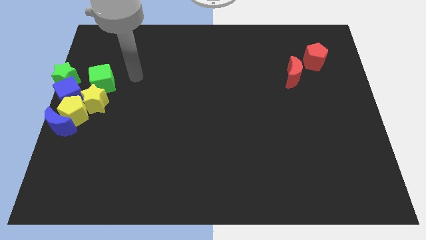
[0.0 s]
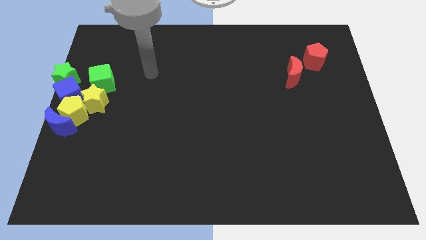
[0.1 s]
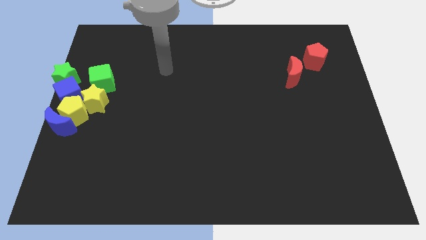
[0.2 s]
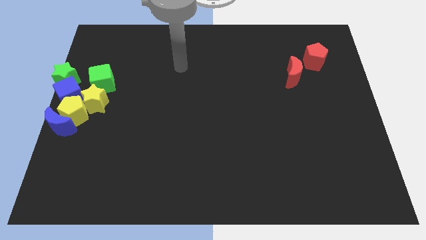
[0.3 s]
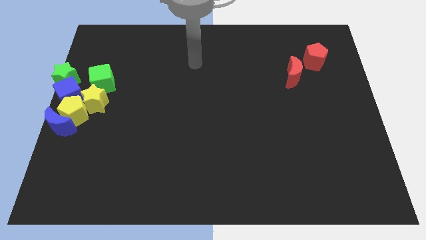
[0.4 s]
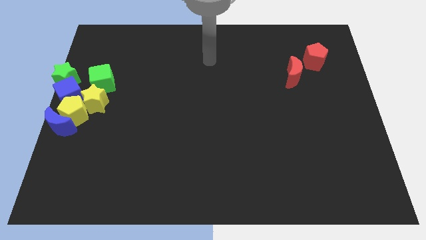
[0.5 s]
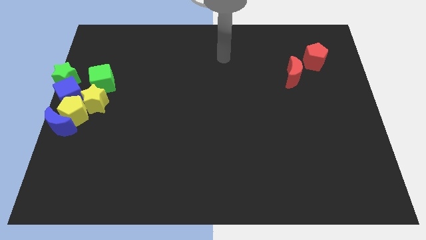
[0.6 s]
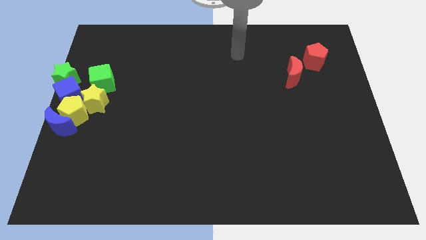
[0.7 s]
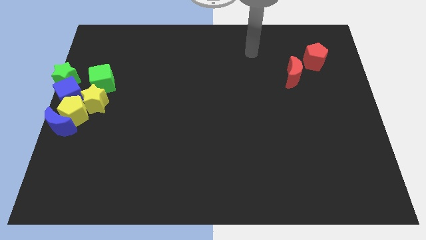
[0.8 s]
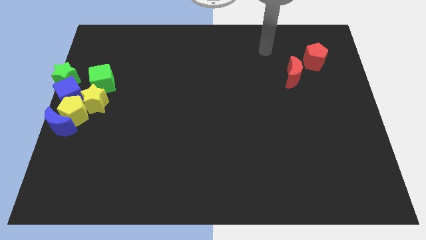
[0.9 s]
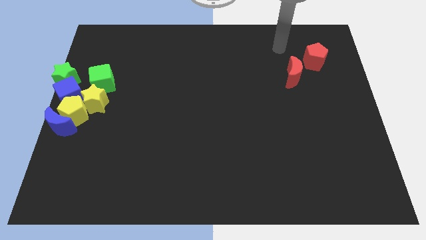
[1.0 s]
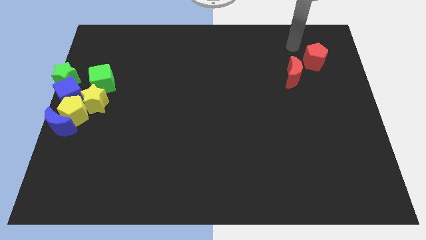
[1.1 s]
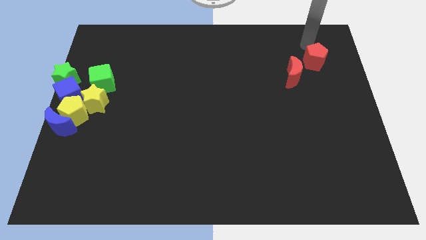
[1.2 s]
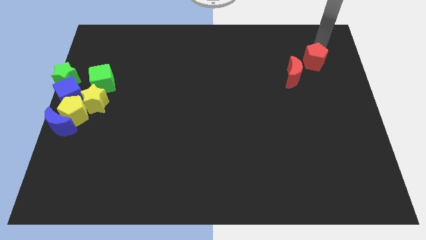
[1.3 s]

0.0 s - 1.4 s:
point the arm above the red pentagon

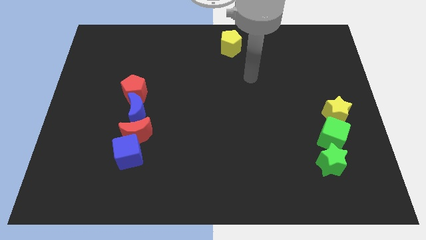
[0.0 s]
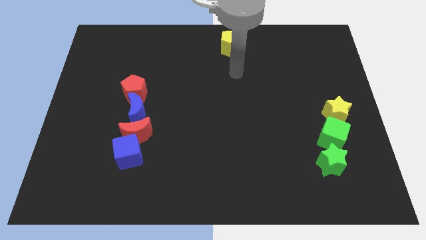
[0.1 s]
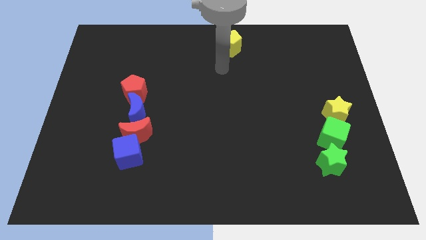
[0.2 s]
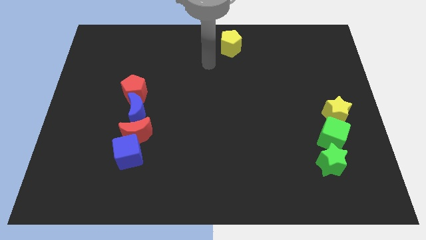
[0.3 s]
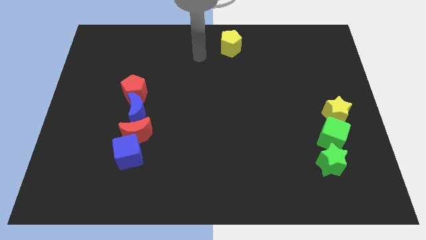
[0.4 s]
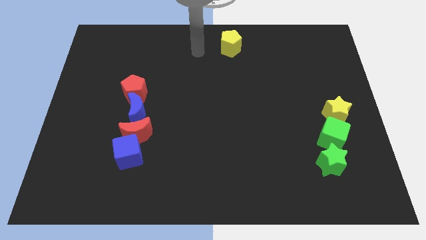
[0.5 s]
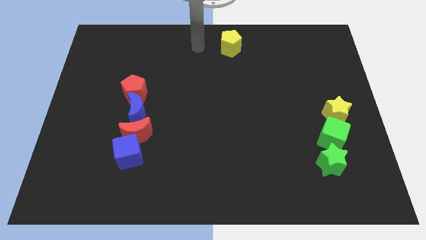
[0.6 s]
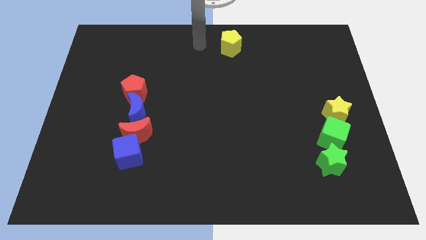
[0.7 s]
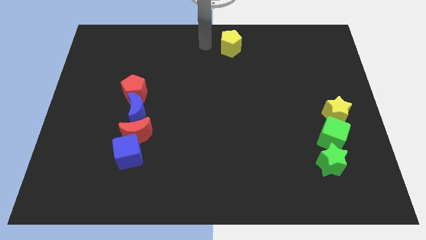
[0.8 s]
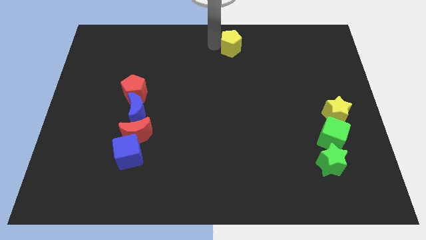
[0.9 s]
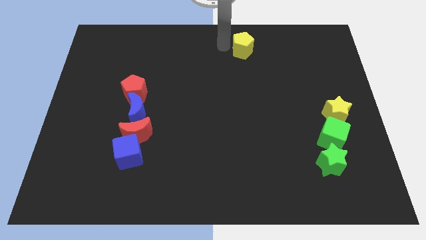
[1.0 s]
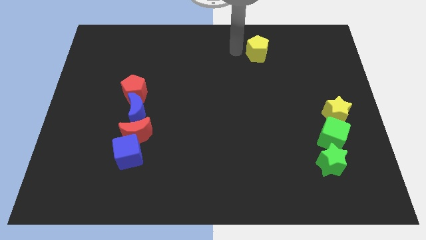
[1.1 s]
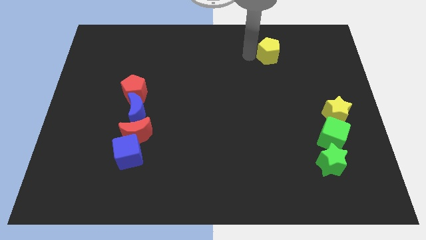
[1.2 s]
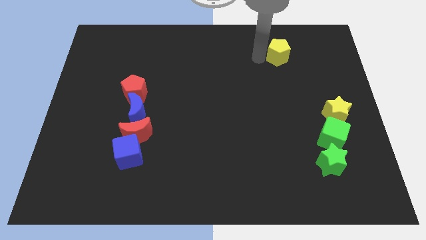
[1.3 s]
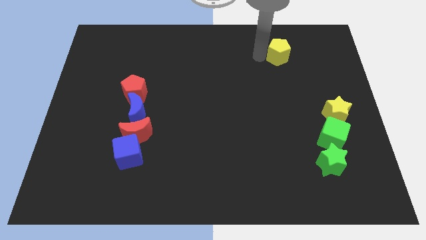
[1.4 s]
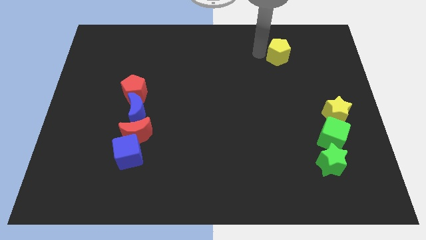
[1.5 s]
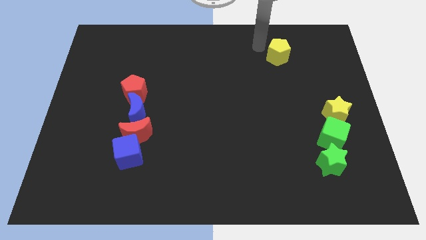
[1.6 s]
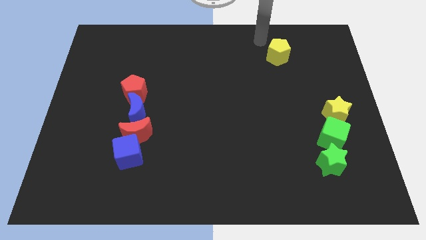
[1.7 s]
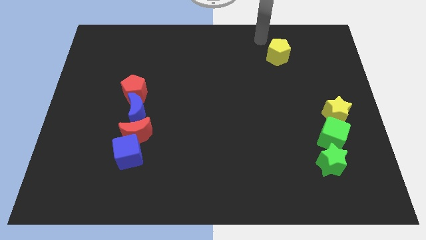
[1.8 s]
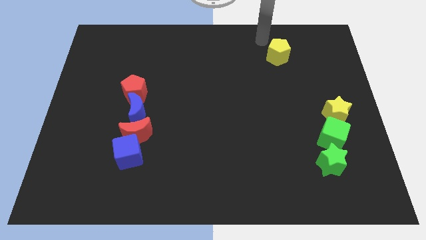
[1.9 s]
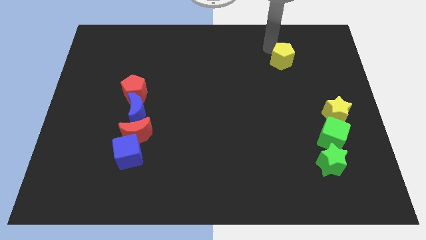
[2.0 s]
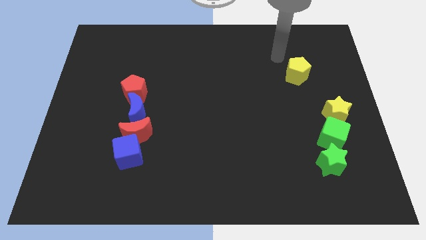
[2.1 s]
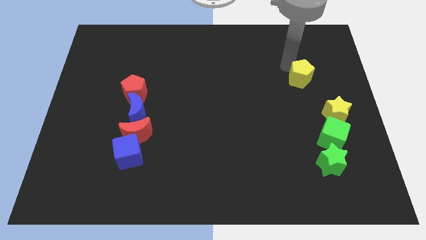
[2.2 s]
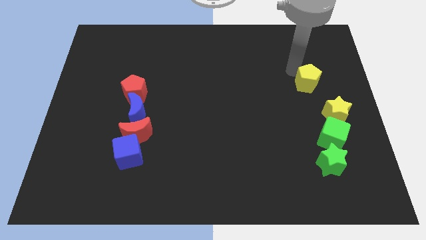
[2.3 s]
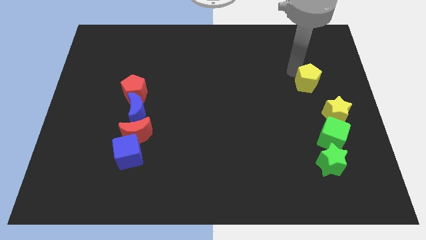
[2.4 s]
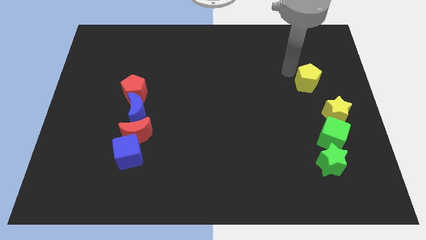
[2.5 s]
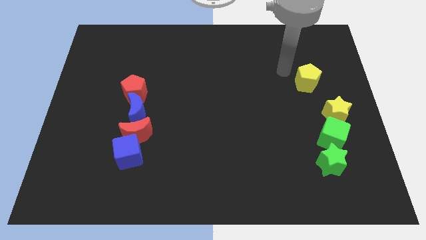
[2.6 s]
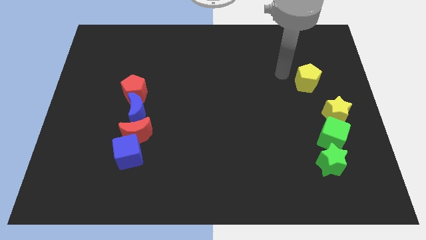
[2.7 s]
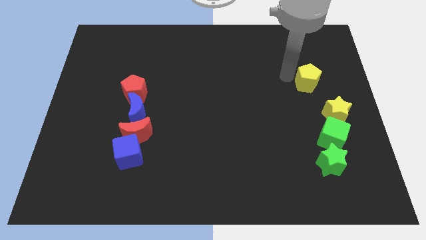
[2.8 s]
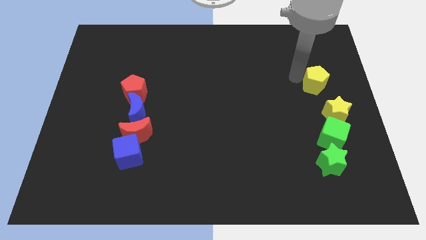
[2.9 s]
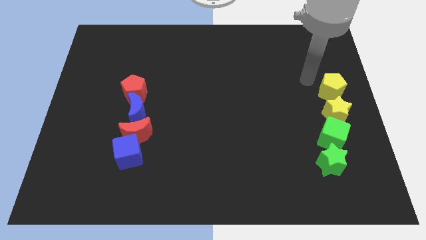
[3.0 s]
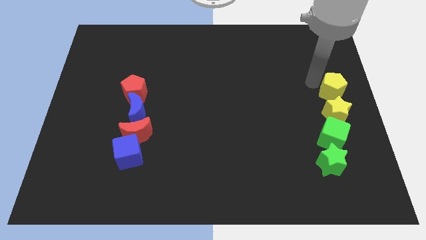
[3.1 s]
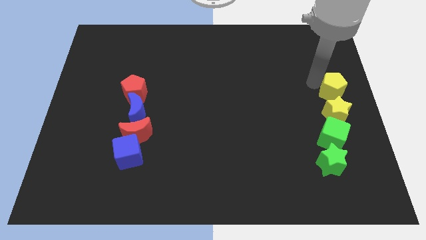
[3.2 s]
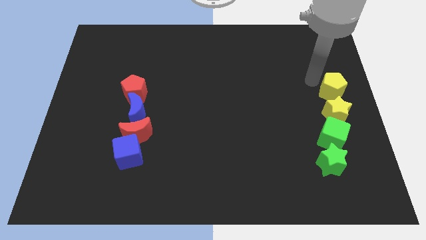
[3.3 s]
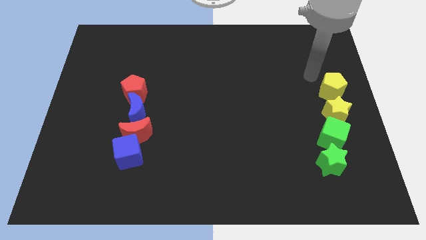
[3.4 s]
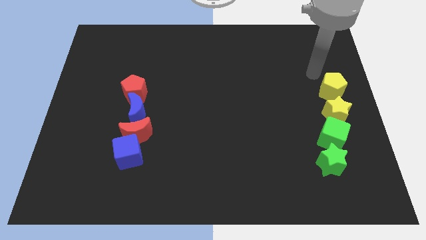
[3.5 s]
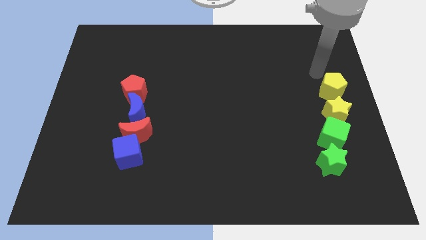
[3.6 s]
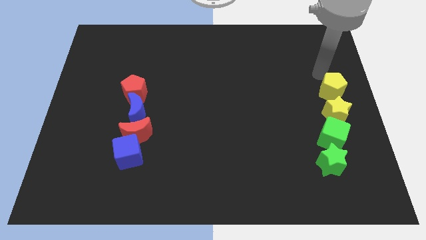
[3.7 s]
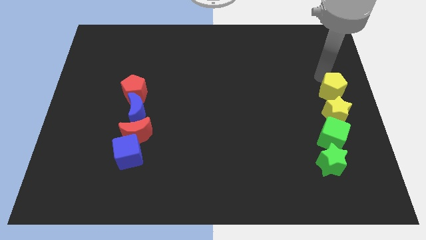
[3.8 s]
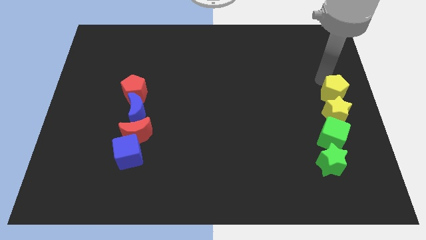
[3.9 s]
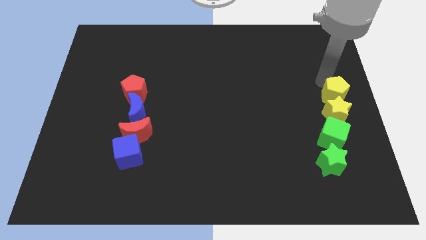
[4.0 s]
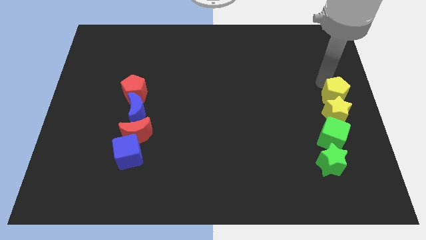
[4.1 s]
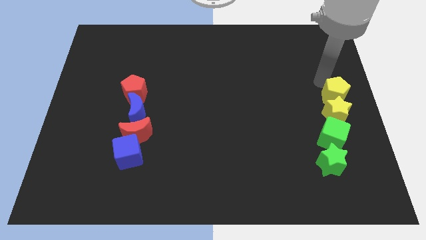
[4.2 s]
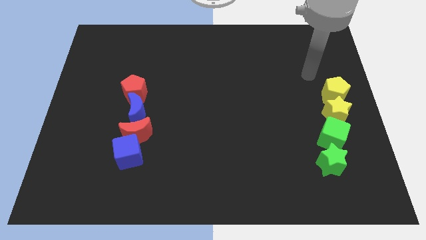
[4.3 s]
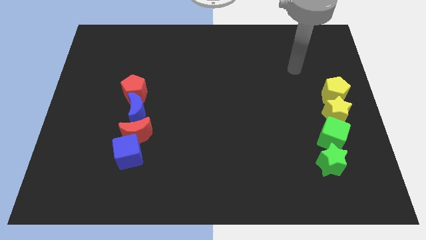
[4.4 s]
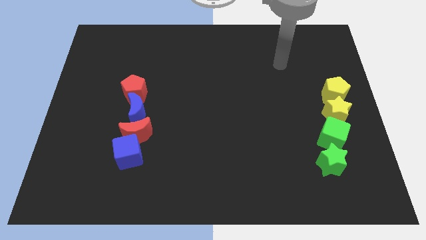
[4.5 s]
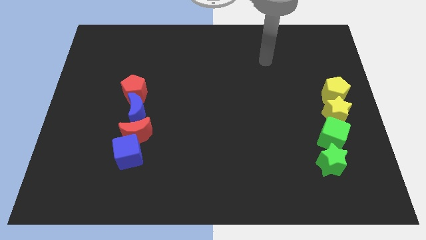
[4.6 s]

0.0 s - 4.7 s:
place the yellow pentagon above the yellow star

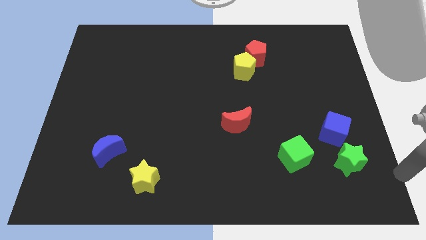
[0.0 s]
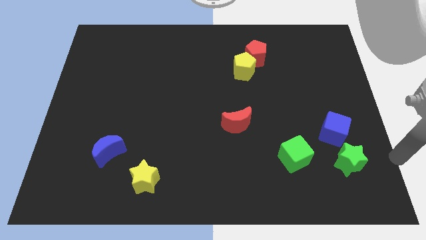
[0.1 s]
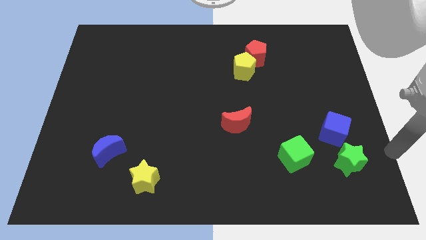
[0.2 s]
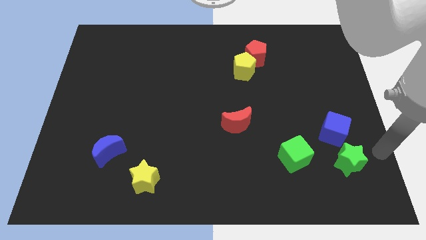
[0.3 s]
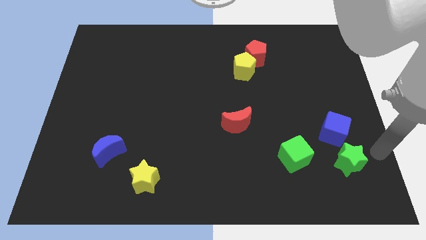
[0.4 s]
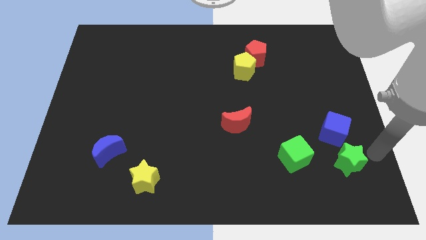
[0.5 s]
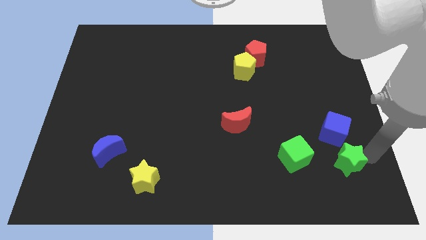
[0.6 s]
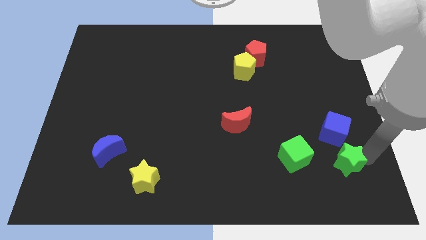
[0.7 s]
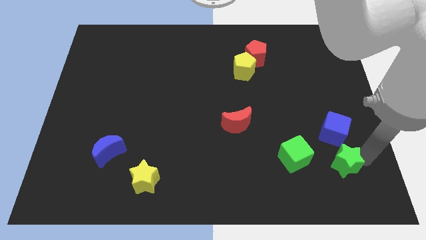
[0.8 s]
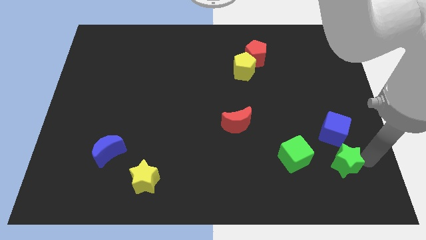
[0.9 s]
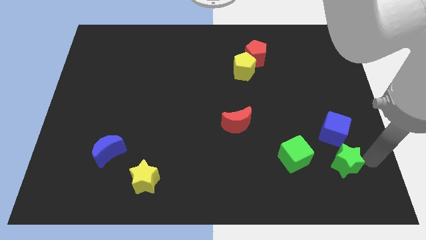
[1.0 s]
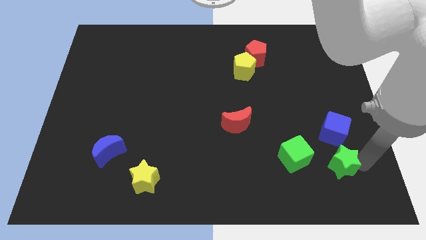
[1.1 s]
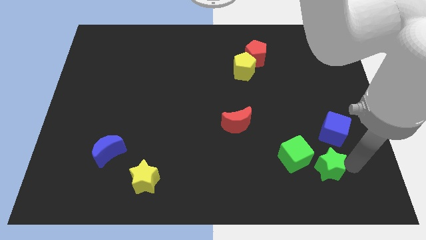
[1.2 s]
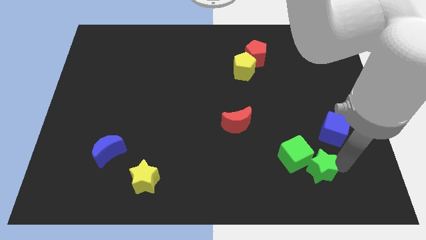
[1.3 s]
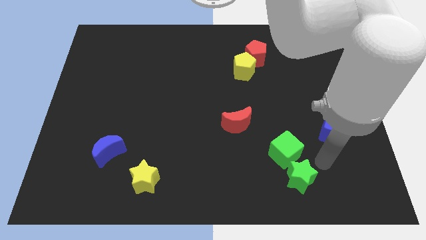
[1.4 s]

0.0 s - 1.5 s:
push the green star into the green cube

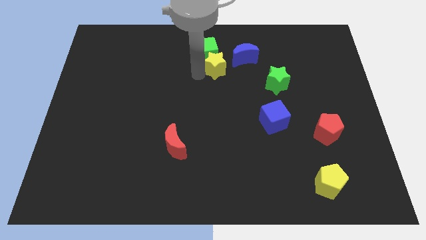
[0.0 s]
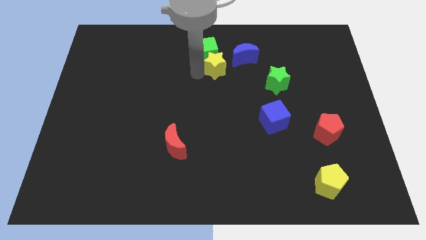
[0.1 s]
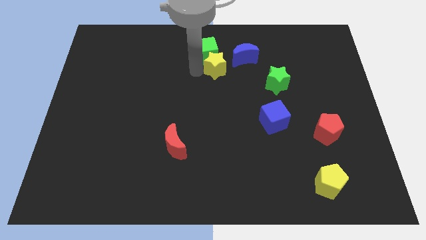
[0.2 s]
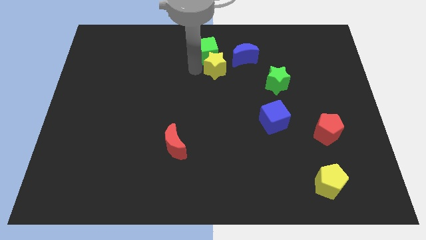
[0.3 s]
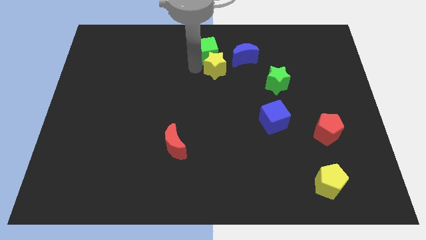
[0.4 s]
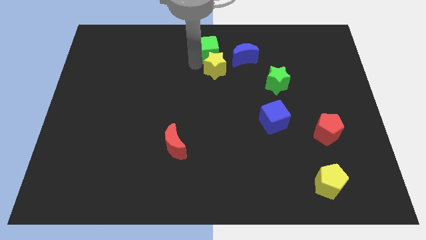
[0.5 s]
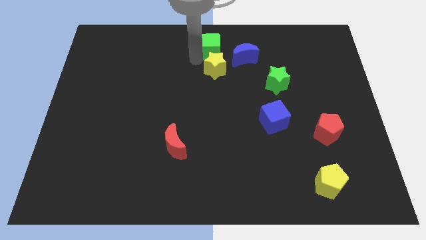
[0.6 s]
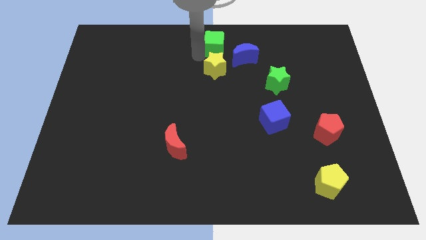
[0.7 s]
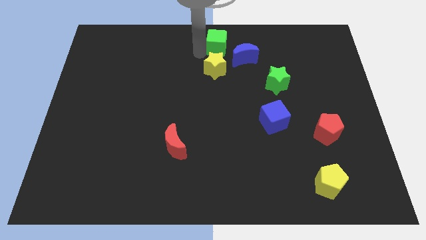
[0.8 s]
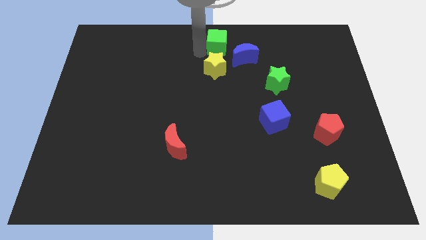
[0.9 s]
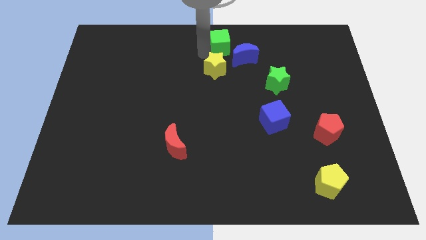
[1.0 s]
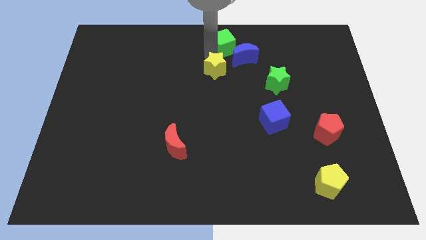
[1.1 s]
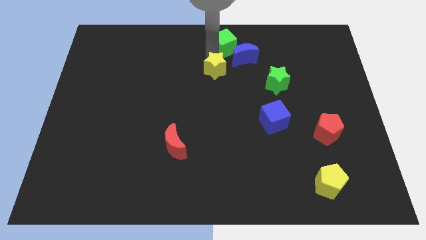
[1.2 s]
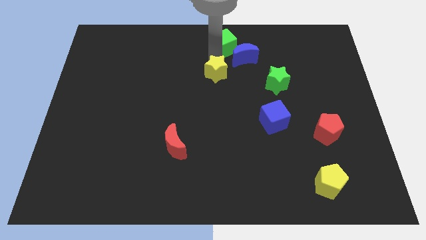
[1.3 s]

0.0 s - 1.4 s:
separate the green cube and yellow star
